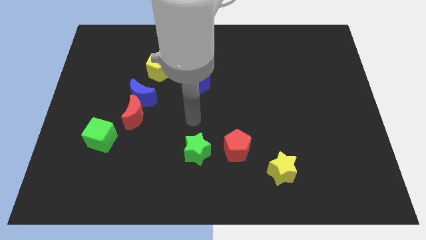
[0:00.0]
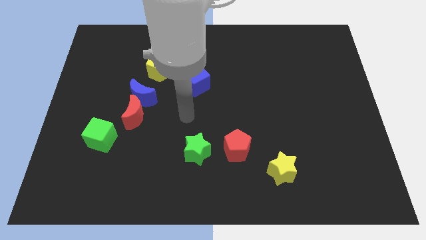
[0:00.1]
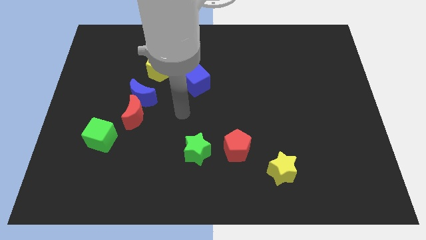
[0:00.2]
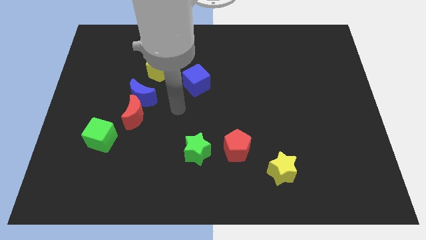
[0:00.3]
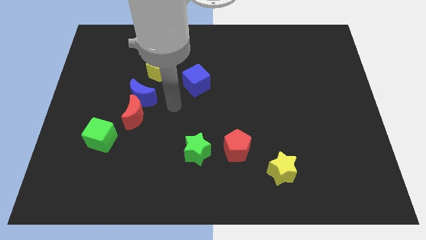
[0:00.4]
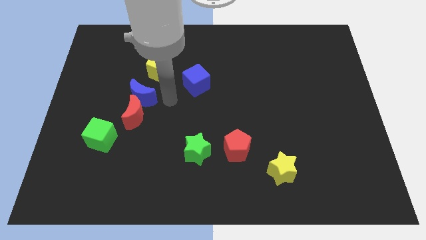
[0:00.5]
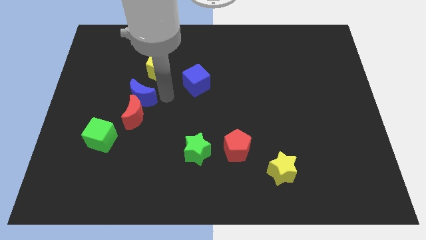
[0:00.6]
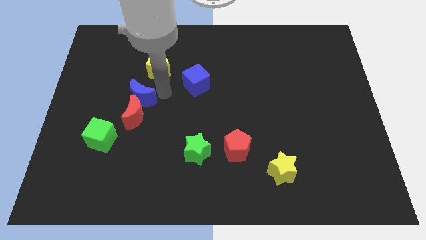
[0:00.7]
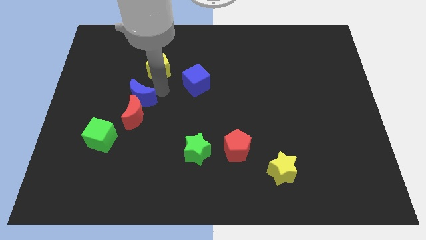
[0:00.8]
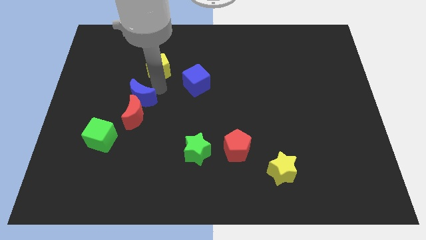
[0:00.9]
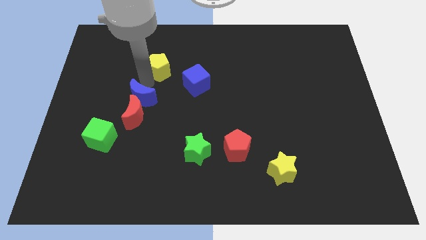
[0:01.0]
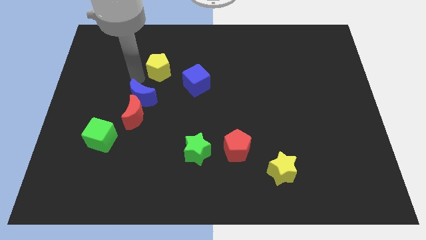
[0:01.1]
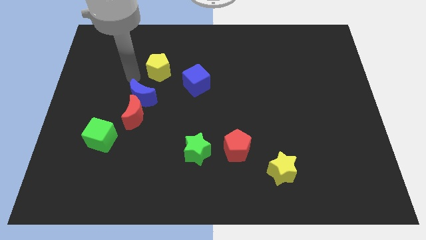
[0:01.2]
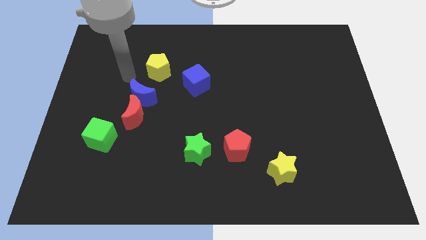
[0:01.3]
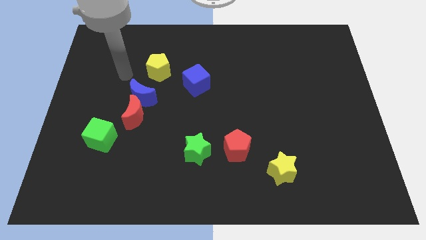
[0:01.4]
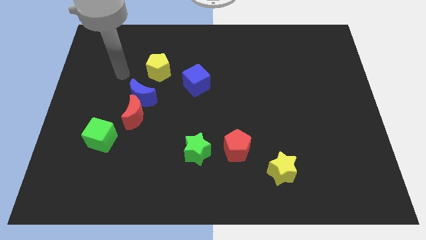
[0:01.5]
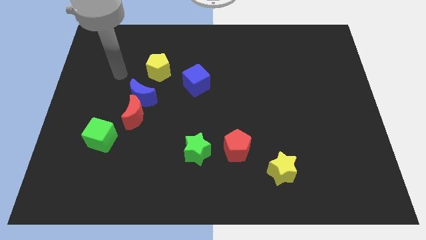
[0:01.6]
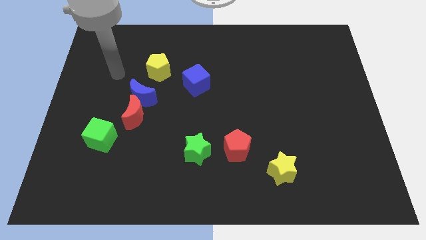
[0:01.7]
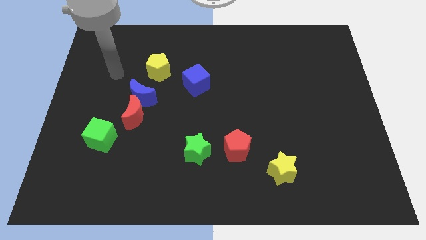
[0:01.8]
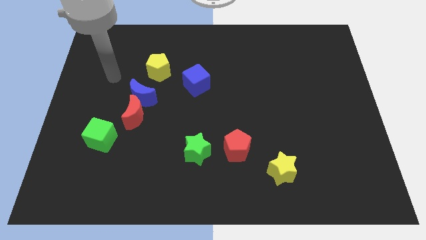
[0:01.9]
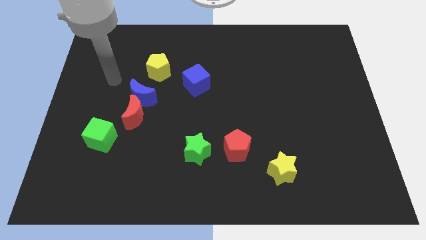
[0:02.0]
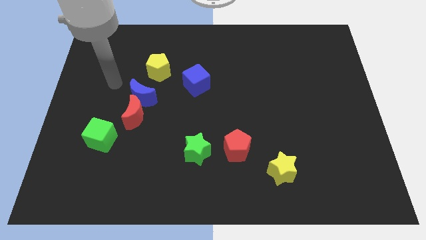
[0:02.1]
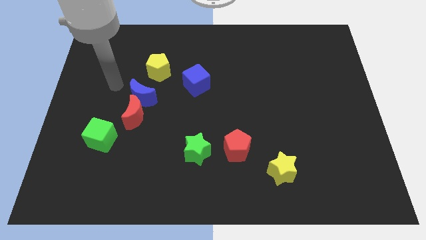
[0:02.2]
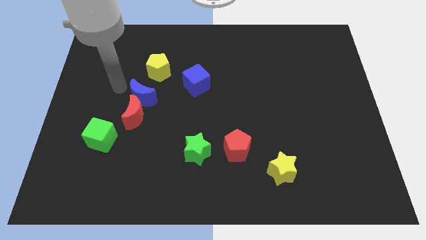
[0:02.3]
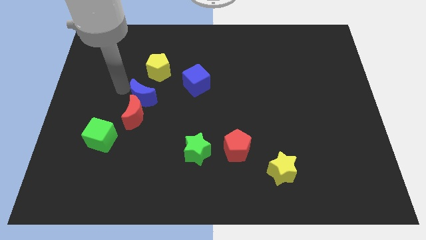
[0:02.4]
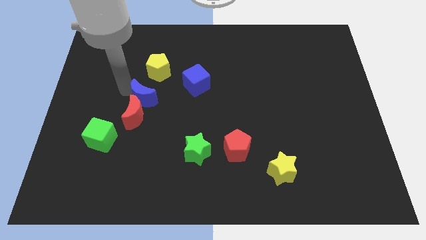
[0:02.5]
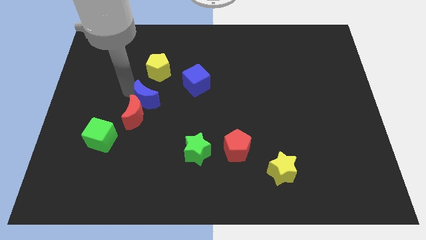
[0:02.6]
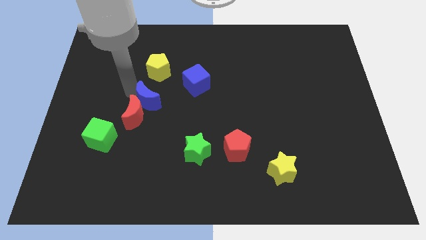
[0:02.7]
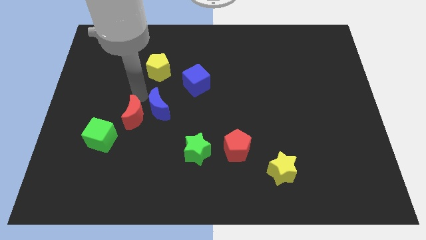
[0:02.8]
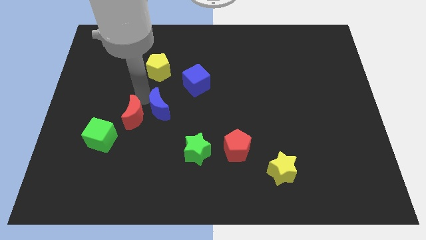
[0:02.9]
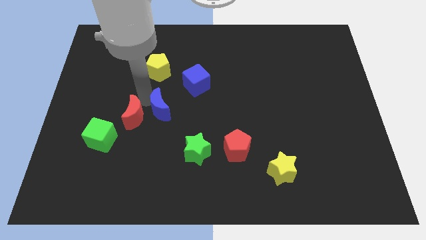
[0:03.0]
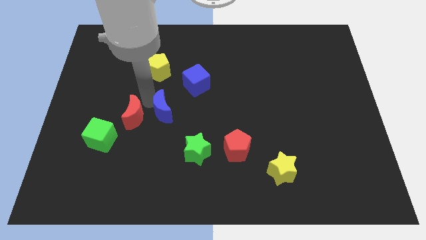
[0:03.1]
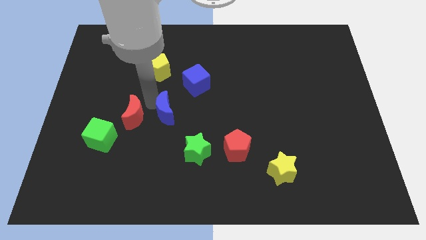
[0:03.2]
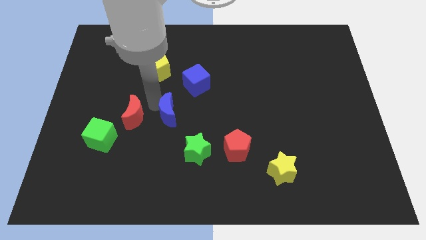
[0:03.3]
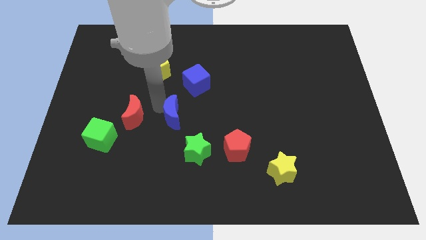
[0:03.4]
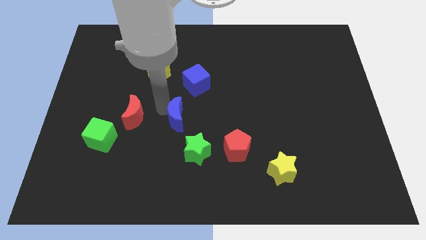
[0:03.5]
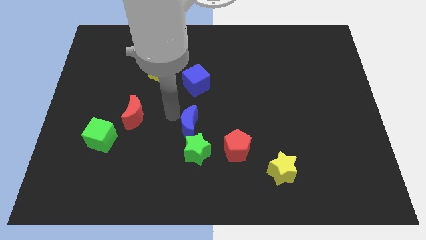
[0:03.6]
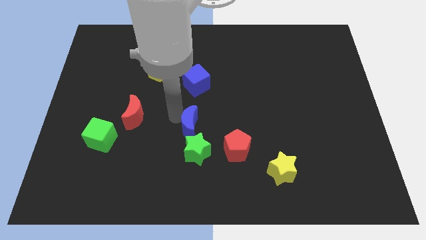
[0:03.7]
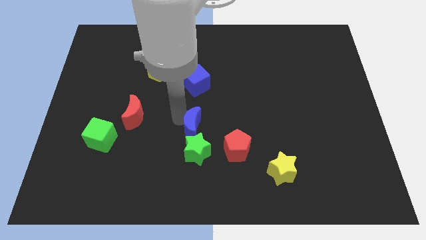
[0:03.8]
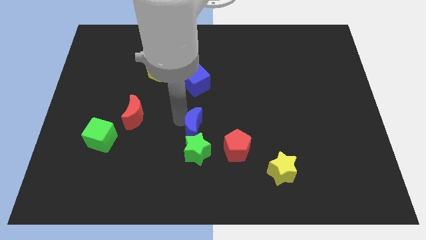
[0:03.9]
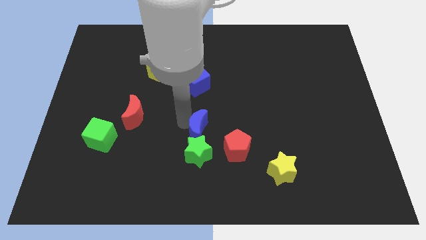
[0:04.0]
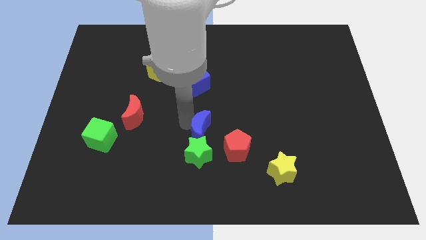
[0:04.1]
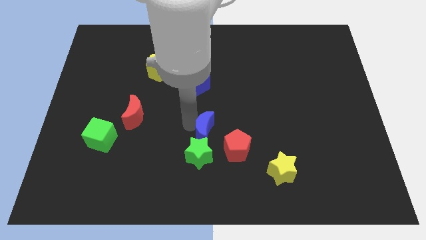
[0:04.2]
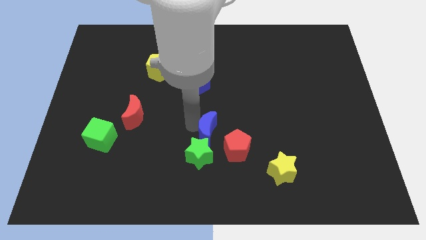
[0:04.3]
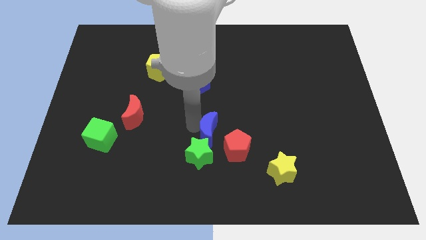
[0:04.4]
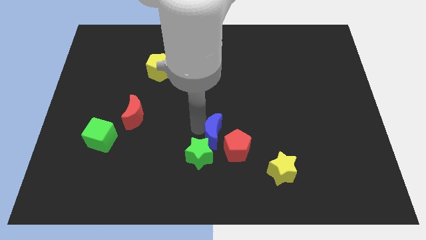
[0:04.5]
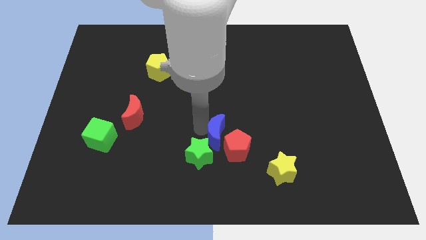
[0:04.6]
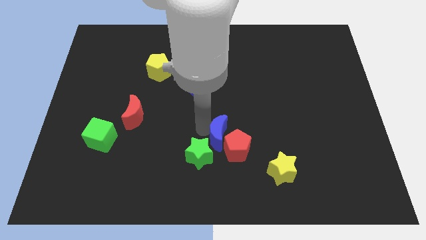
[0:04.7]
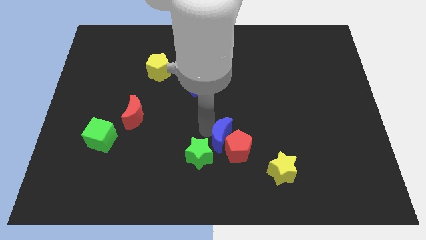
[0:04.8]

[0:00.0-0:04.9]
push the blue moon towards the red pentagon

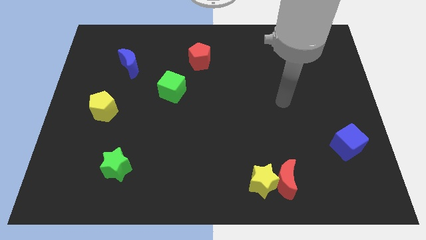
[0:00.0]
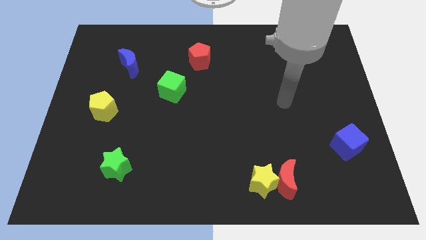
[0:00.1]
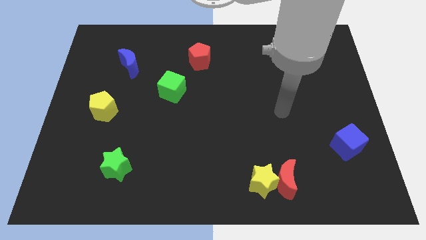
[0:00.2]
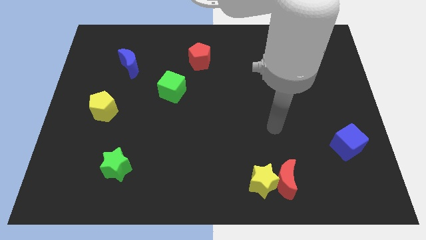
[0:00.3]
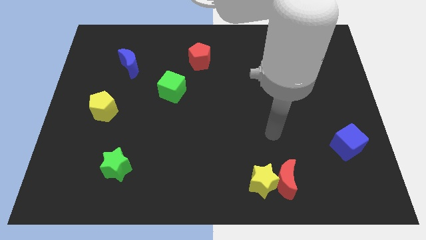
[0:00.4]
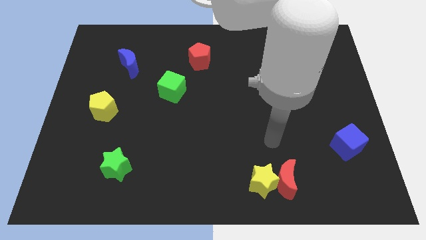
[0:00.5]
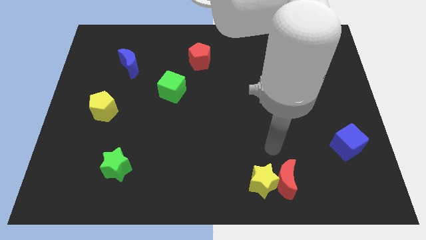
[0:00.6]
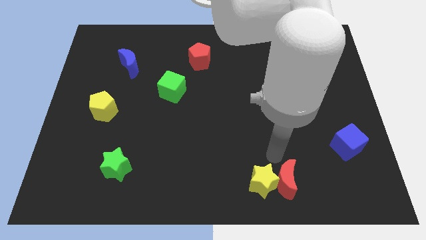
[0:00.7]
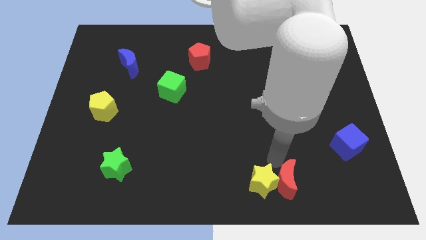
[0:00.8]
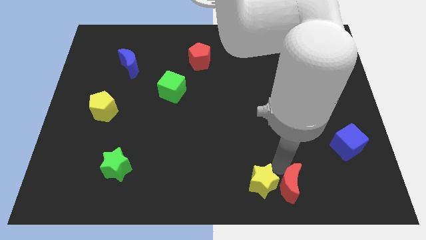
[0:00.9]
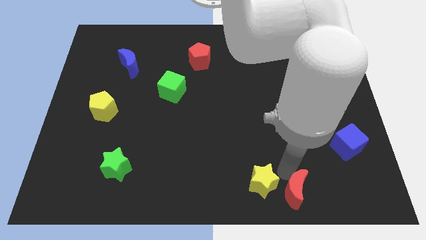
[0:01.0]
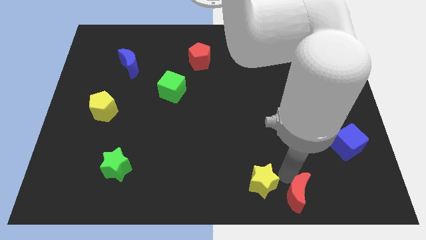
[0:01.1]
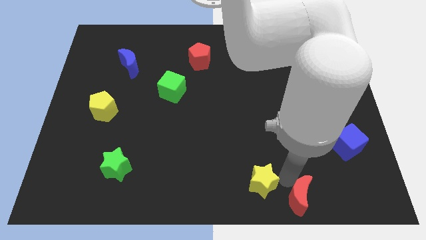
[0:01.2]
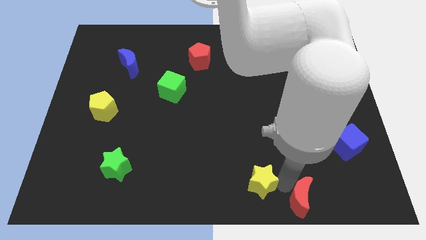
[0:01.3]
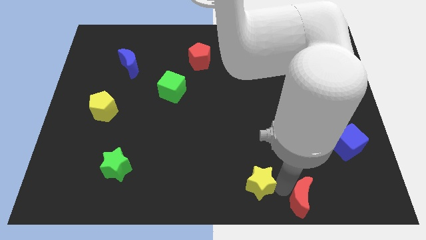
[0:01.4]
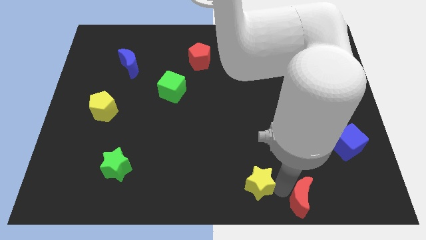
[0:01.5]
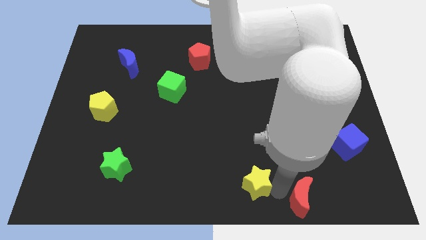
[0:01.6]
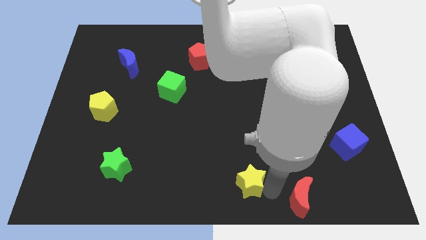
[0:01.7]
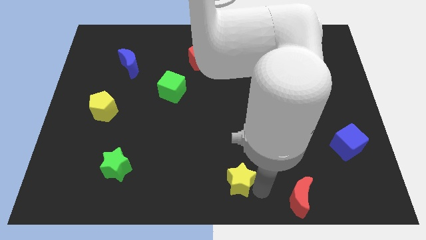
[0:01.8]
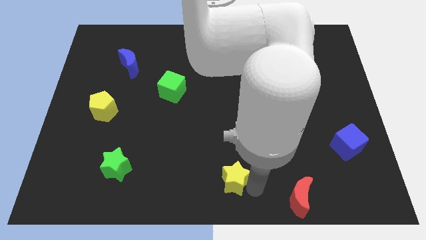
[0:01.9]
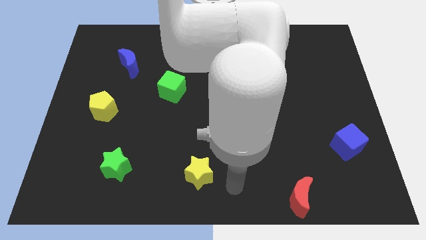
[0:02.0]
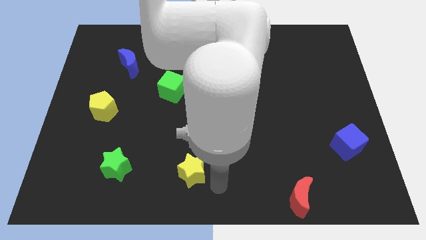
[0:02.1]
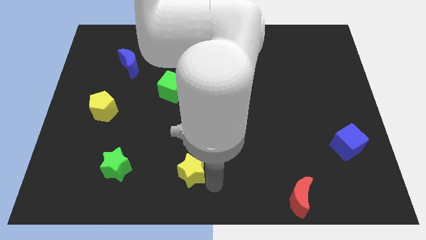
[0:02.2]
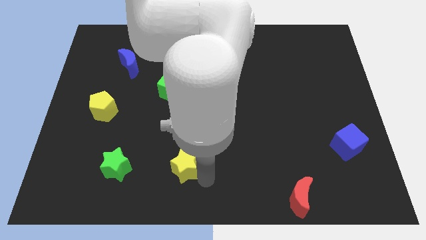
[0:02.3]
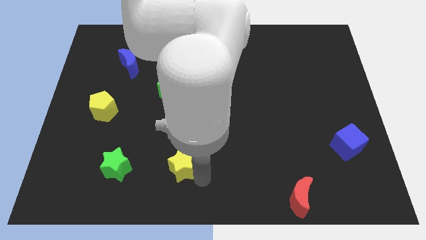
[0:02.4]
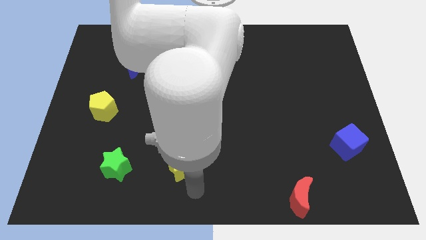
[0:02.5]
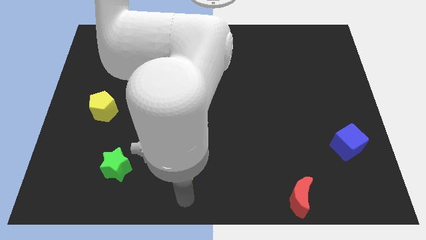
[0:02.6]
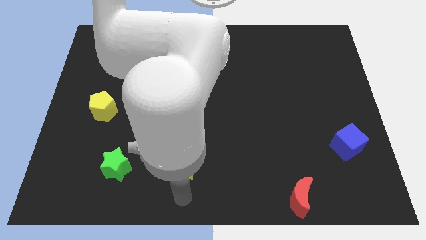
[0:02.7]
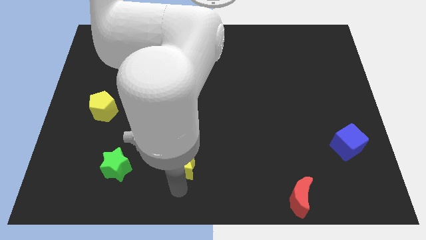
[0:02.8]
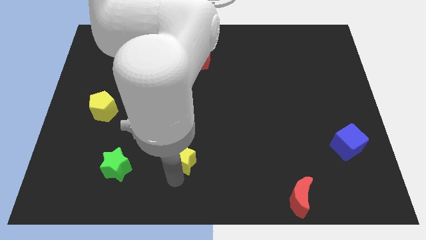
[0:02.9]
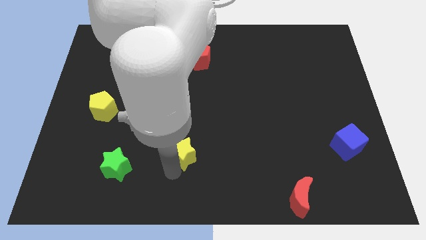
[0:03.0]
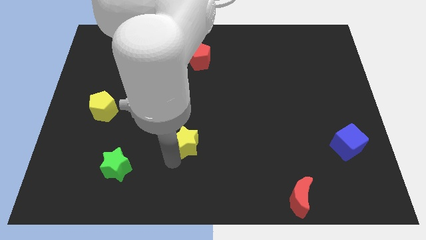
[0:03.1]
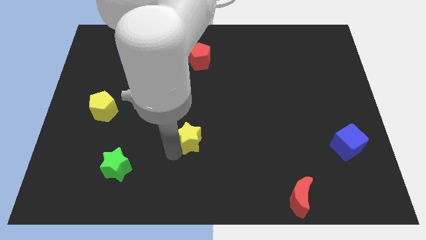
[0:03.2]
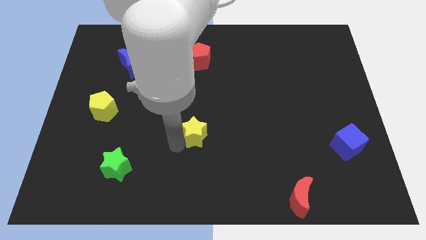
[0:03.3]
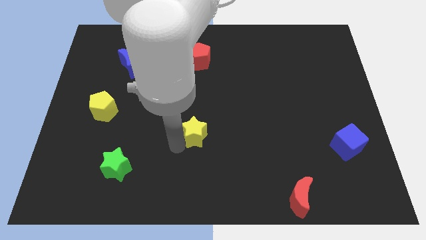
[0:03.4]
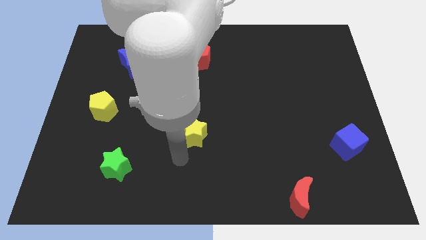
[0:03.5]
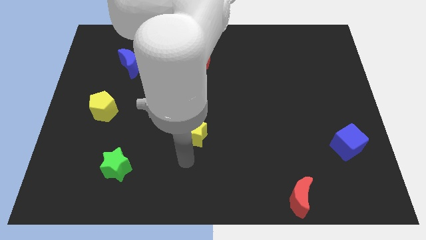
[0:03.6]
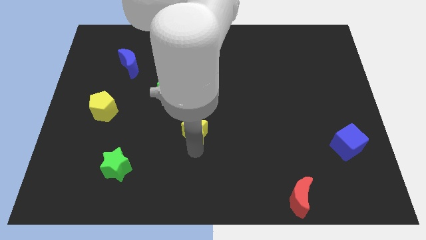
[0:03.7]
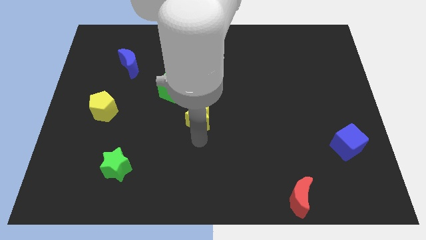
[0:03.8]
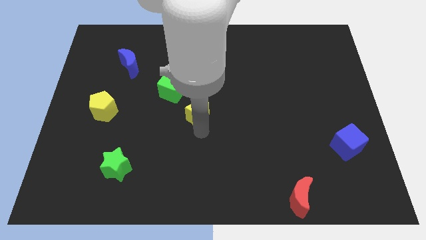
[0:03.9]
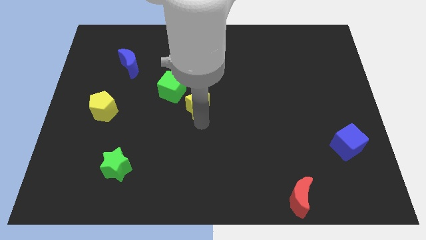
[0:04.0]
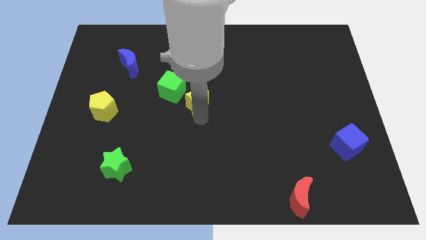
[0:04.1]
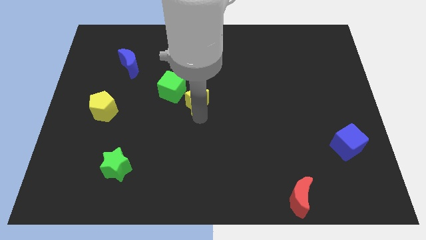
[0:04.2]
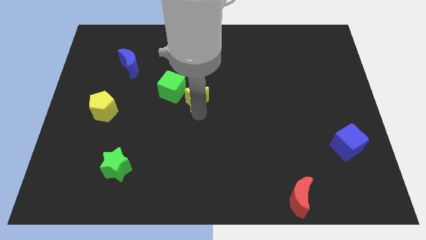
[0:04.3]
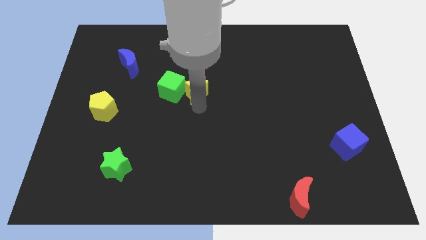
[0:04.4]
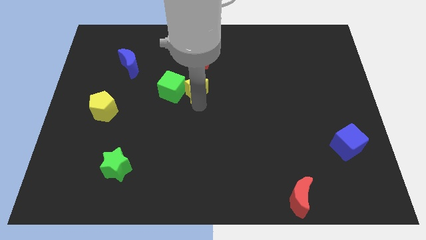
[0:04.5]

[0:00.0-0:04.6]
move the yellow star towards the green cube
